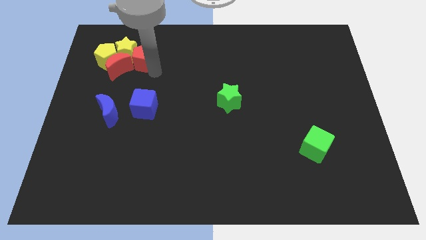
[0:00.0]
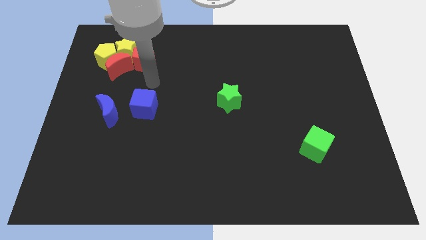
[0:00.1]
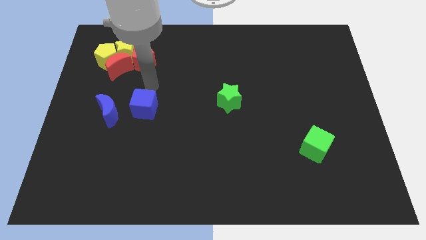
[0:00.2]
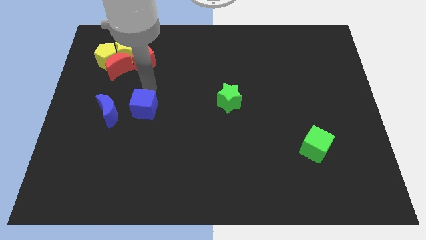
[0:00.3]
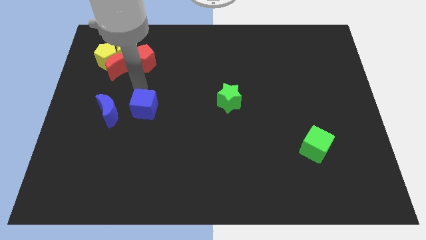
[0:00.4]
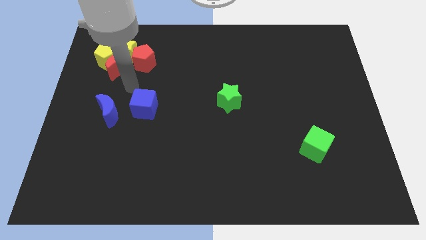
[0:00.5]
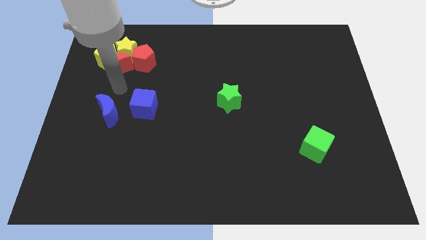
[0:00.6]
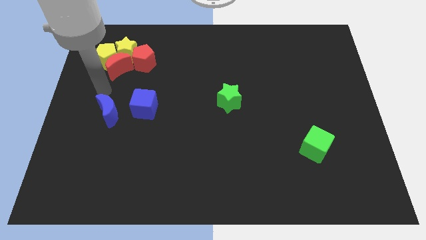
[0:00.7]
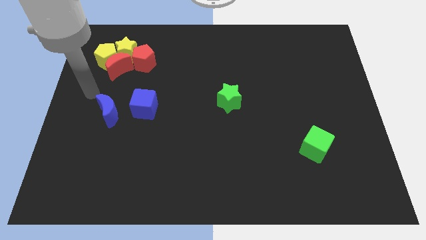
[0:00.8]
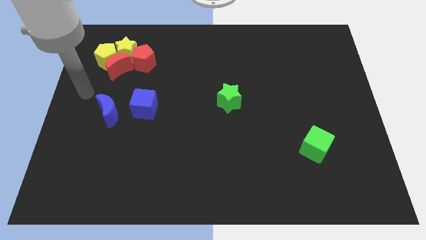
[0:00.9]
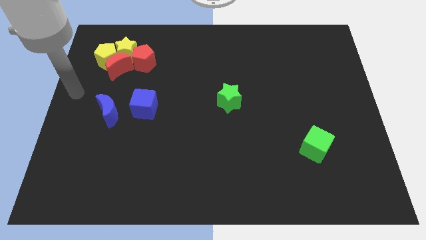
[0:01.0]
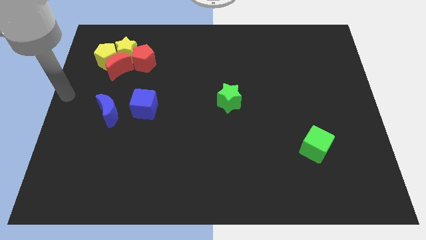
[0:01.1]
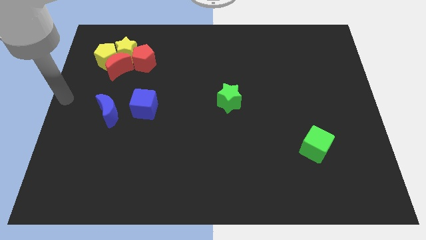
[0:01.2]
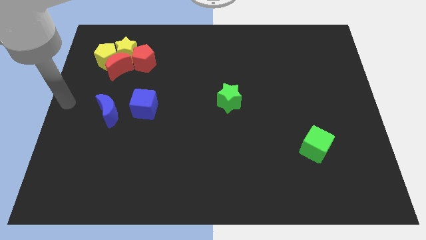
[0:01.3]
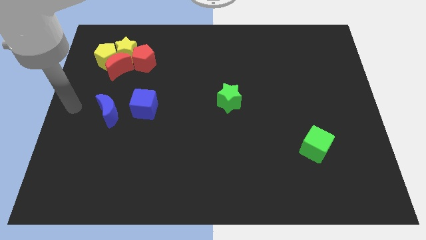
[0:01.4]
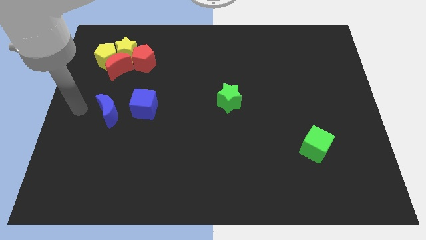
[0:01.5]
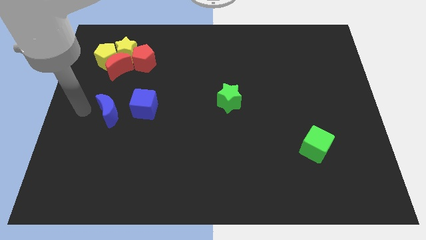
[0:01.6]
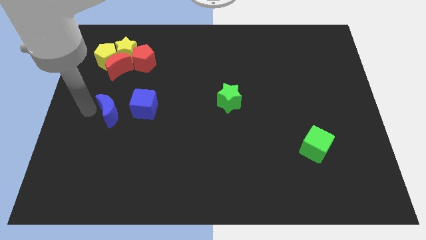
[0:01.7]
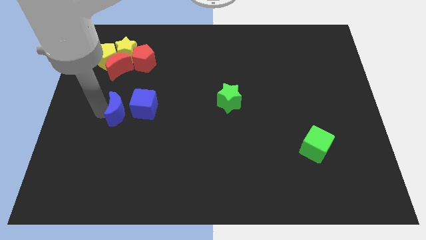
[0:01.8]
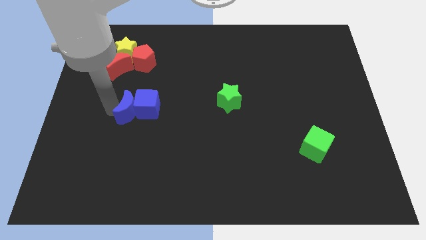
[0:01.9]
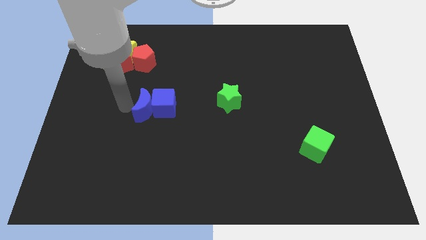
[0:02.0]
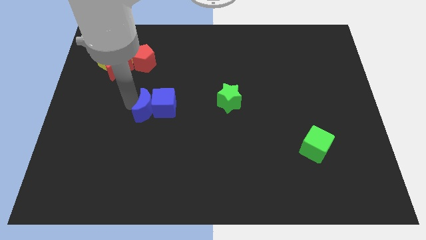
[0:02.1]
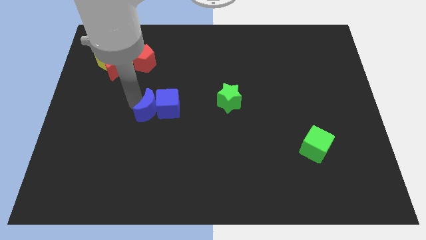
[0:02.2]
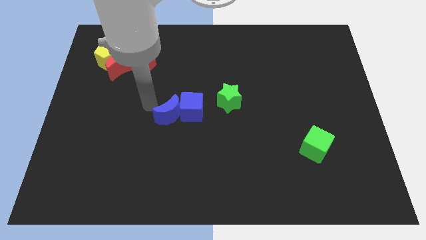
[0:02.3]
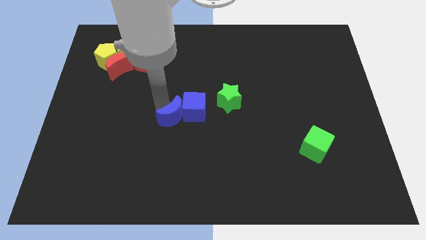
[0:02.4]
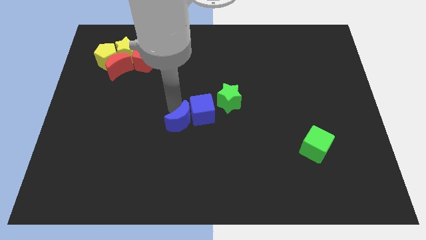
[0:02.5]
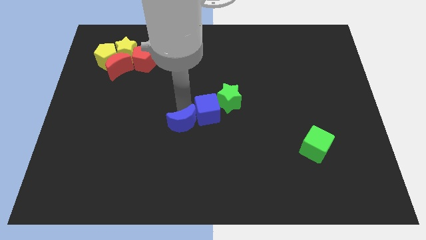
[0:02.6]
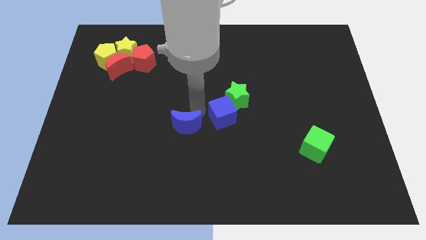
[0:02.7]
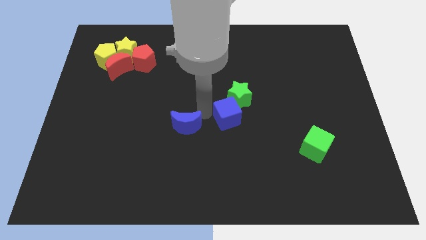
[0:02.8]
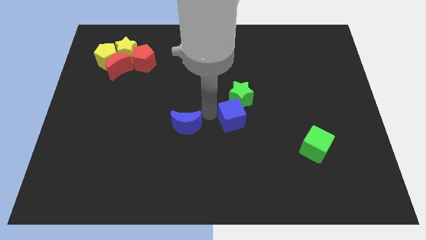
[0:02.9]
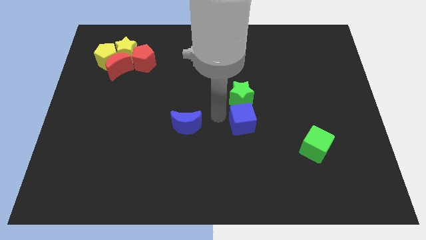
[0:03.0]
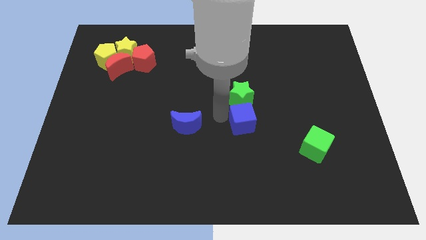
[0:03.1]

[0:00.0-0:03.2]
push blue cube below green star

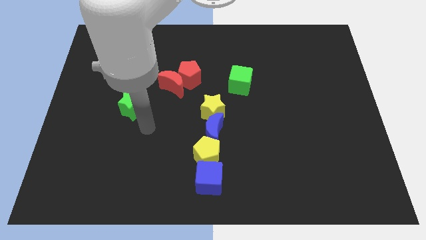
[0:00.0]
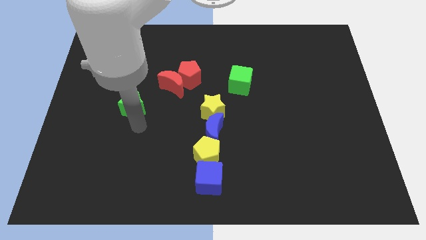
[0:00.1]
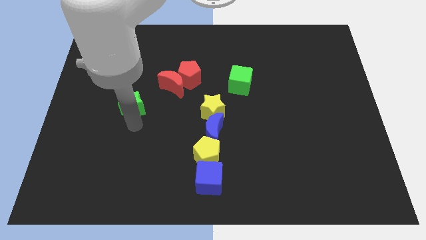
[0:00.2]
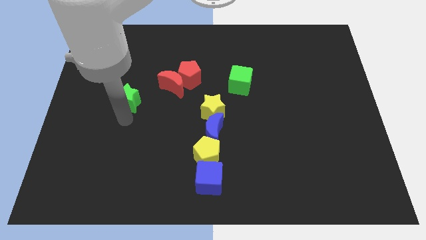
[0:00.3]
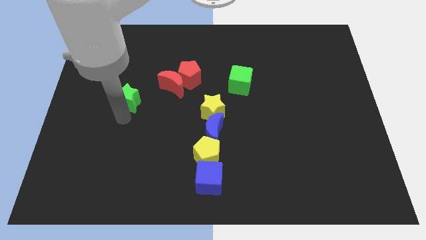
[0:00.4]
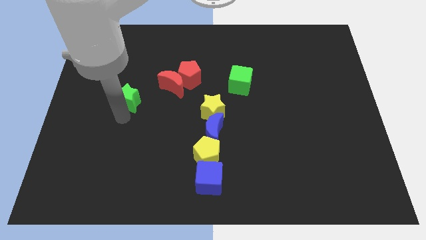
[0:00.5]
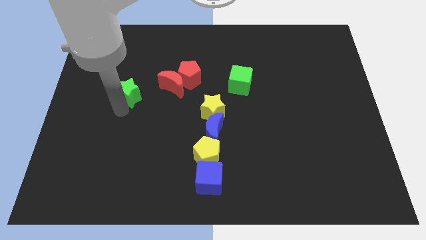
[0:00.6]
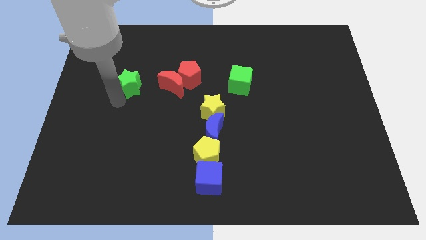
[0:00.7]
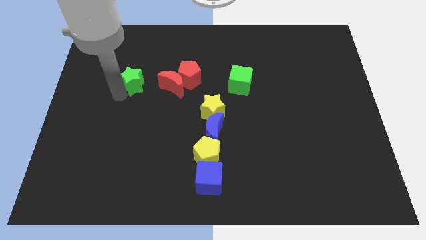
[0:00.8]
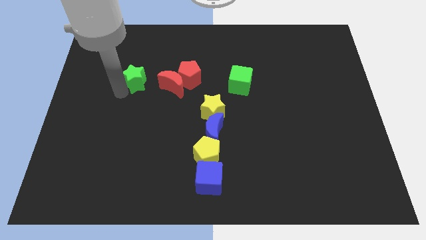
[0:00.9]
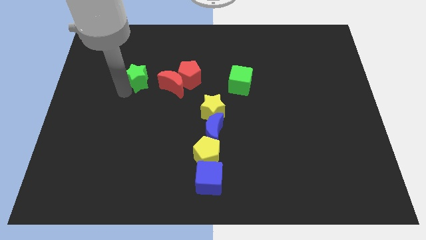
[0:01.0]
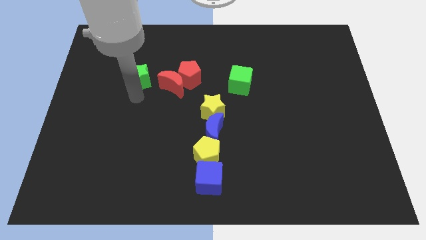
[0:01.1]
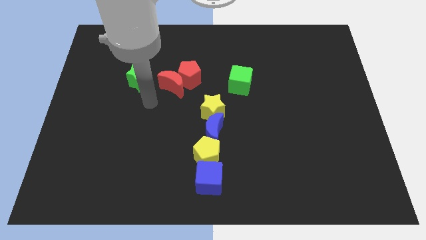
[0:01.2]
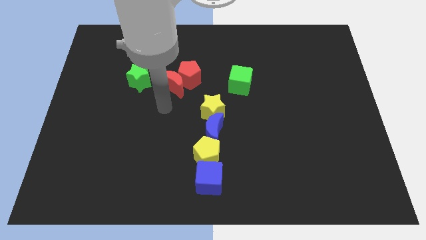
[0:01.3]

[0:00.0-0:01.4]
put the green star to the left of the two red blocks

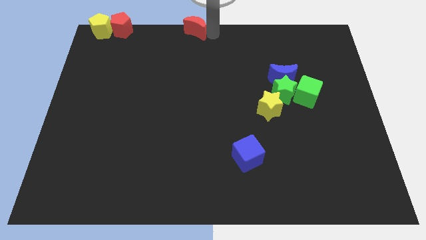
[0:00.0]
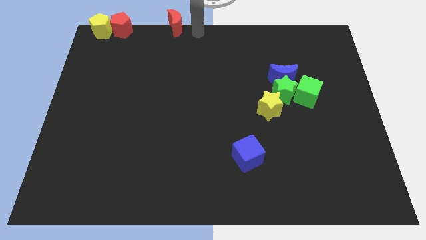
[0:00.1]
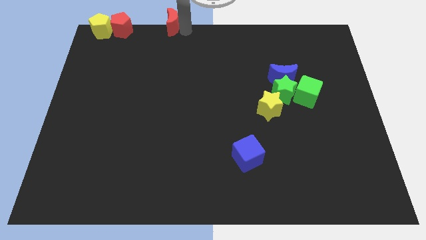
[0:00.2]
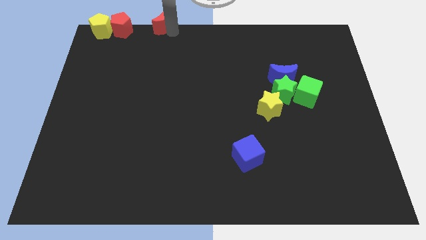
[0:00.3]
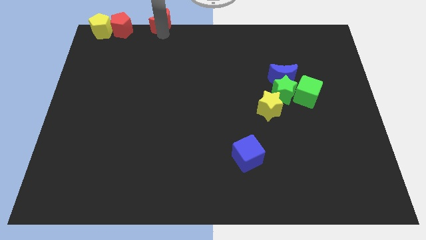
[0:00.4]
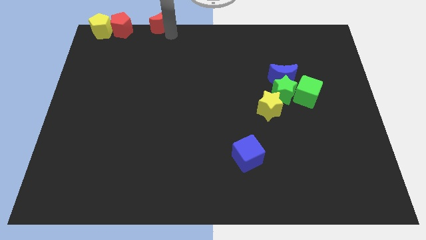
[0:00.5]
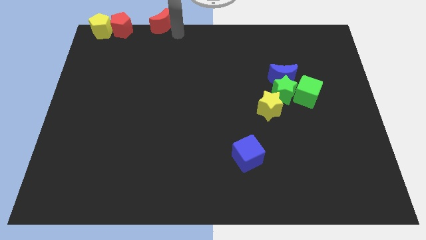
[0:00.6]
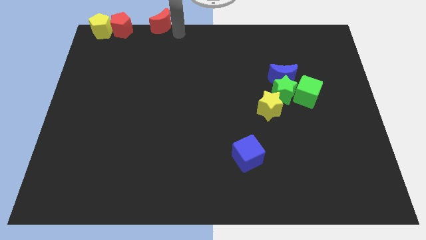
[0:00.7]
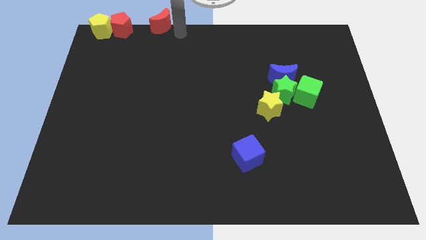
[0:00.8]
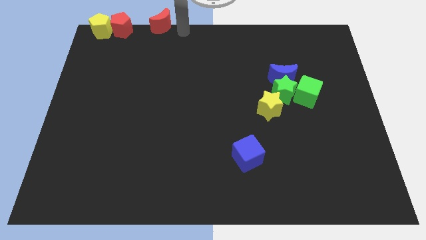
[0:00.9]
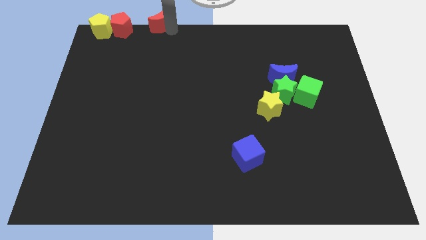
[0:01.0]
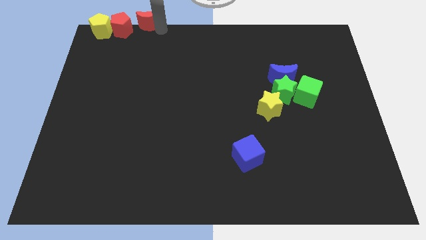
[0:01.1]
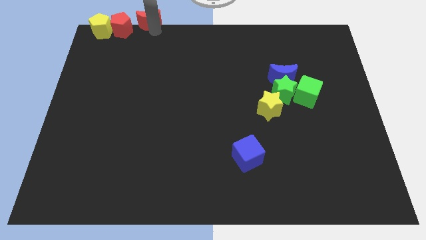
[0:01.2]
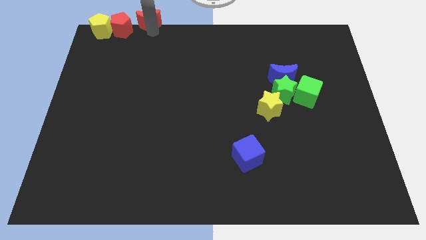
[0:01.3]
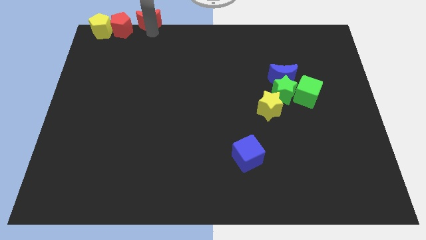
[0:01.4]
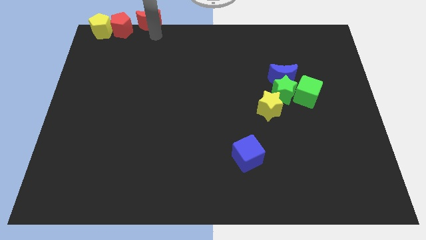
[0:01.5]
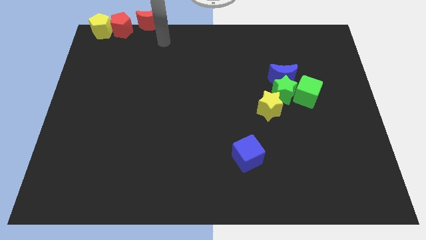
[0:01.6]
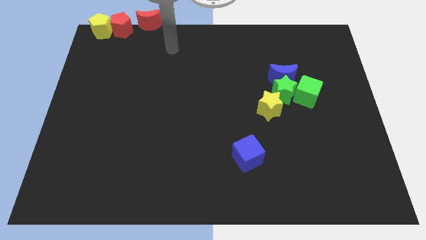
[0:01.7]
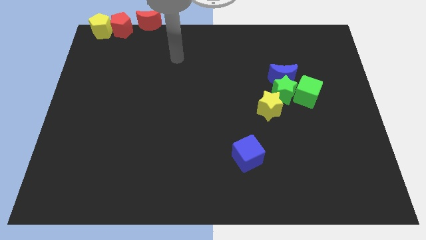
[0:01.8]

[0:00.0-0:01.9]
push red moon towards red pentagon

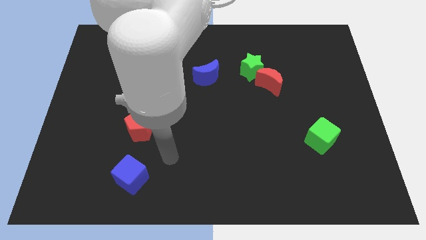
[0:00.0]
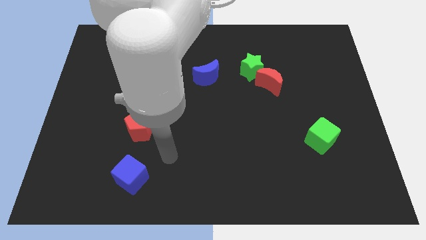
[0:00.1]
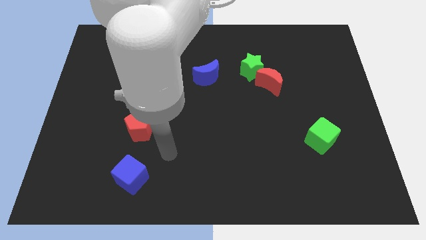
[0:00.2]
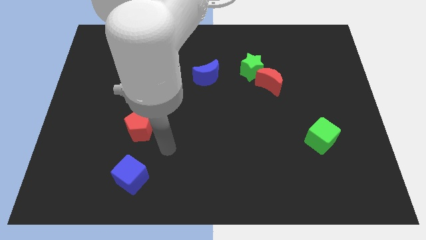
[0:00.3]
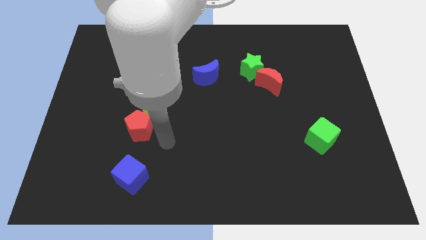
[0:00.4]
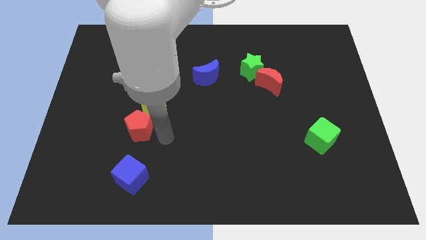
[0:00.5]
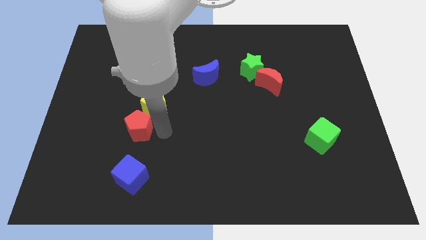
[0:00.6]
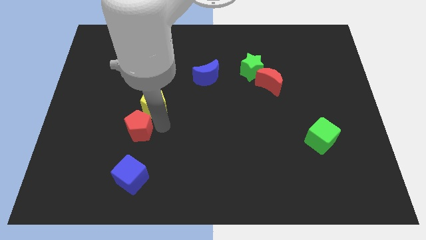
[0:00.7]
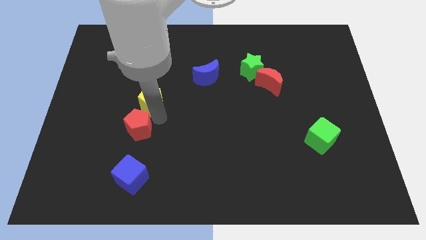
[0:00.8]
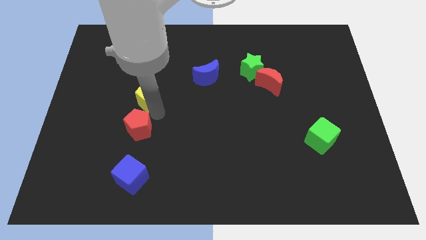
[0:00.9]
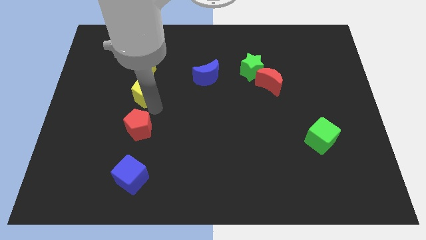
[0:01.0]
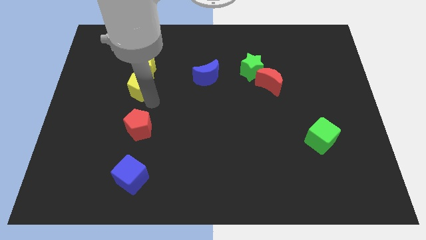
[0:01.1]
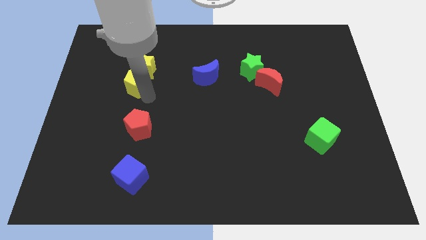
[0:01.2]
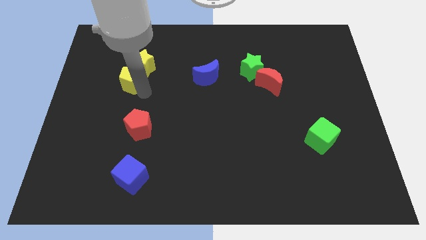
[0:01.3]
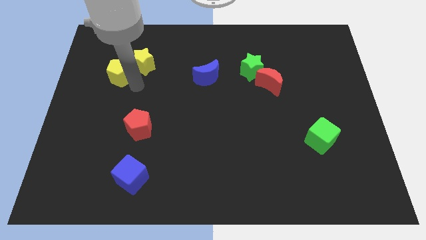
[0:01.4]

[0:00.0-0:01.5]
push yellow pentagon towards the top left of the board

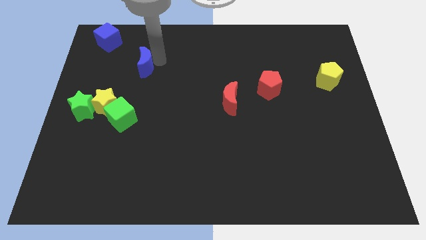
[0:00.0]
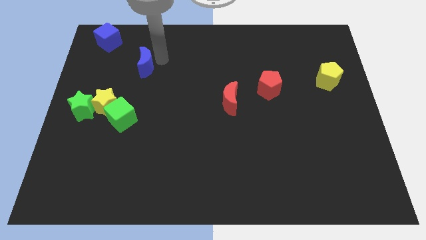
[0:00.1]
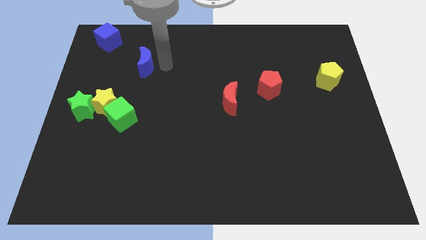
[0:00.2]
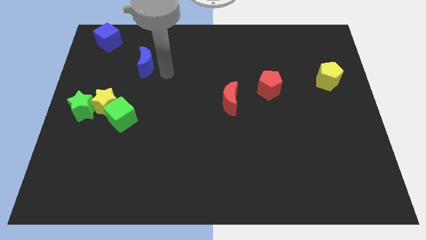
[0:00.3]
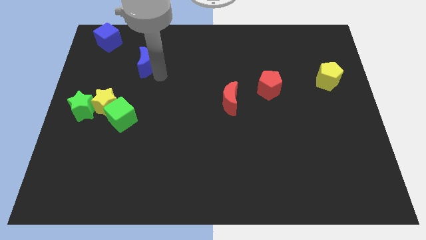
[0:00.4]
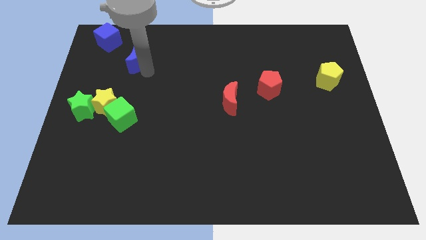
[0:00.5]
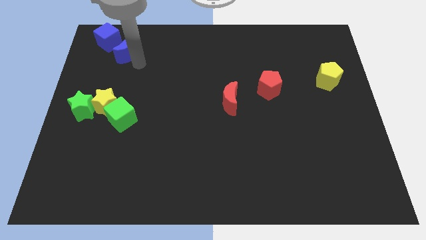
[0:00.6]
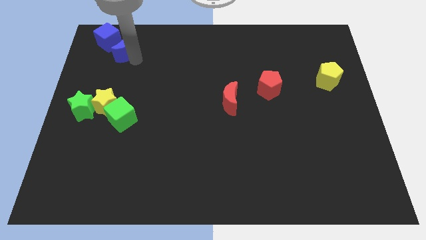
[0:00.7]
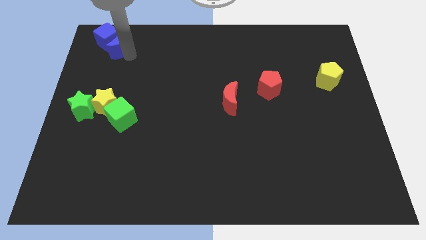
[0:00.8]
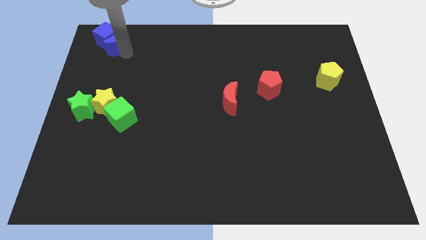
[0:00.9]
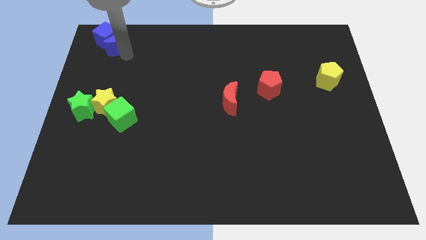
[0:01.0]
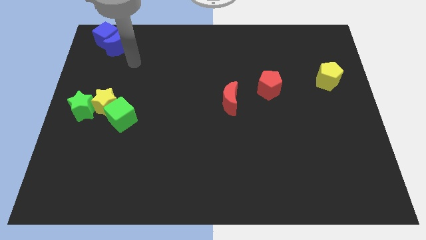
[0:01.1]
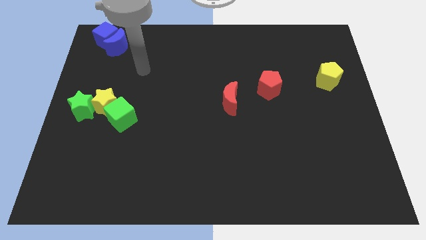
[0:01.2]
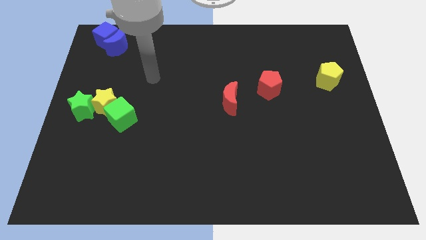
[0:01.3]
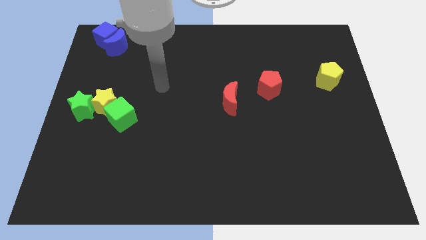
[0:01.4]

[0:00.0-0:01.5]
push the blue crescent into the blue cube
